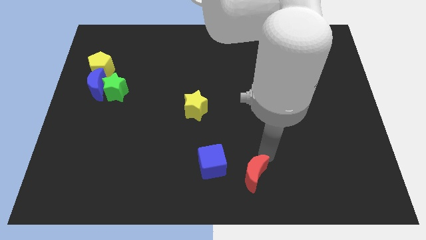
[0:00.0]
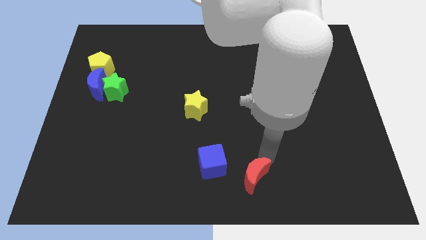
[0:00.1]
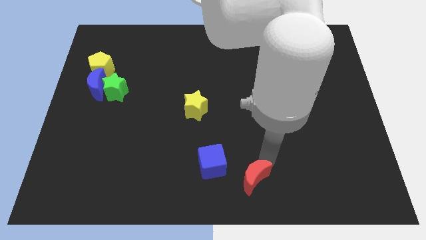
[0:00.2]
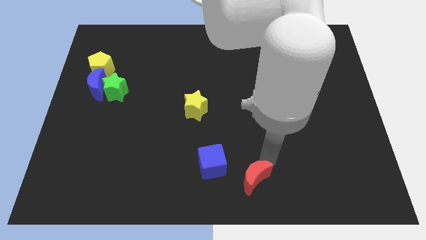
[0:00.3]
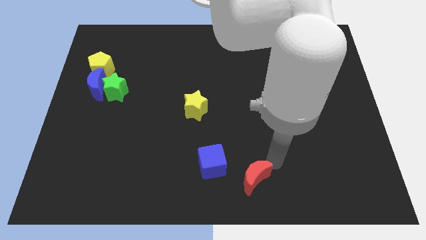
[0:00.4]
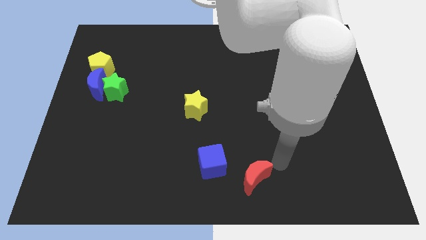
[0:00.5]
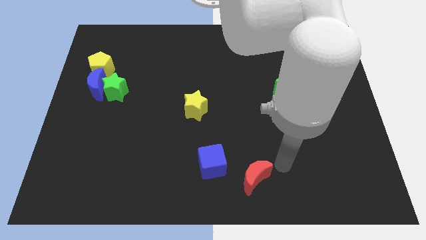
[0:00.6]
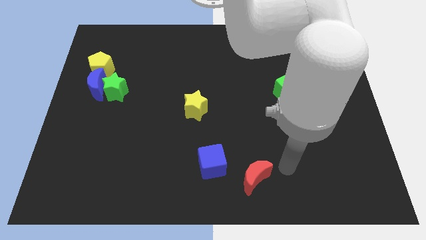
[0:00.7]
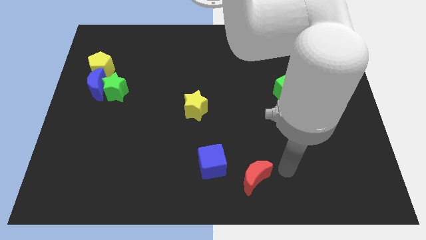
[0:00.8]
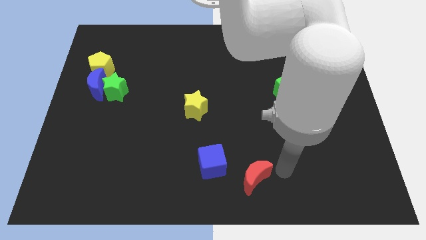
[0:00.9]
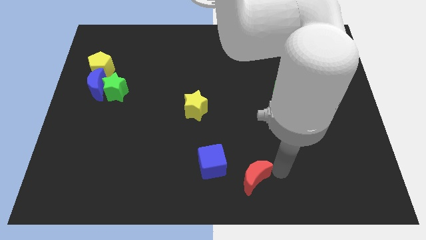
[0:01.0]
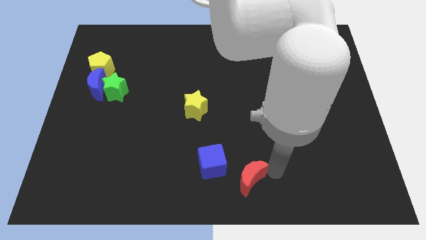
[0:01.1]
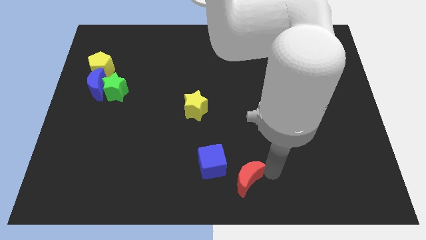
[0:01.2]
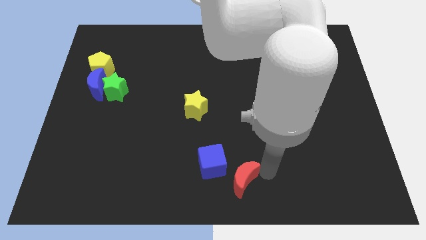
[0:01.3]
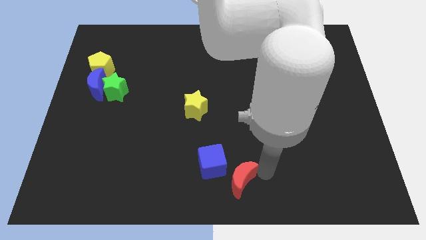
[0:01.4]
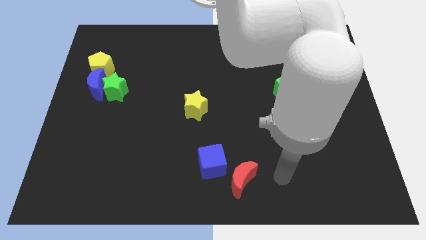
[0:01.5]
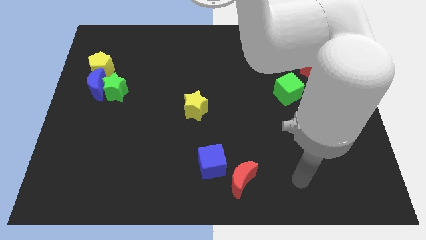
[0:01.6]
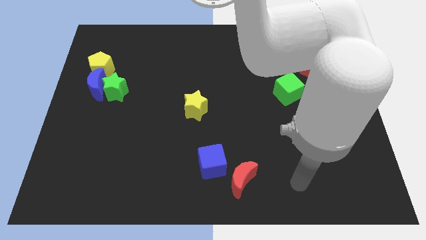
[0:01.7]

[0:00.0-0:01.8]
move red crescent to the left

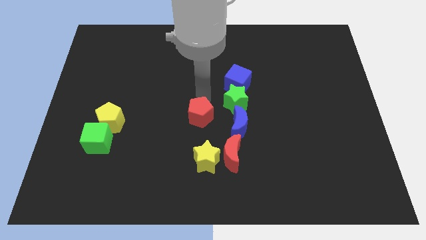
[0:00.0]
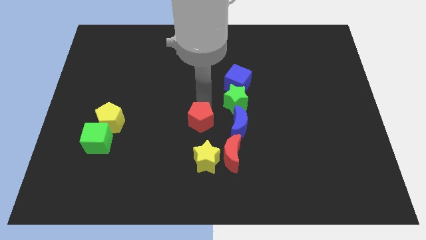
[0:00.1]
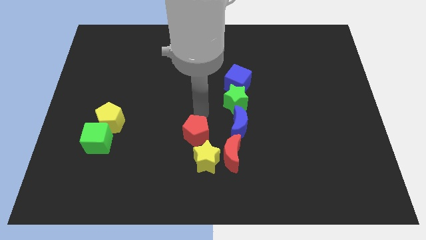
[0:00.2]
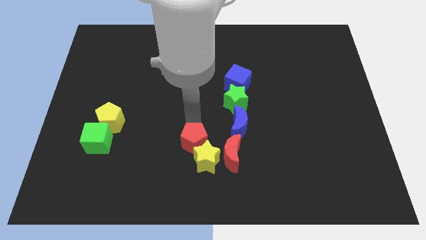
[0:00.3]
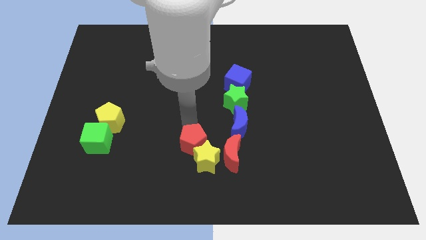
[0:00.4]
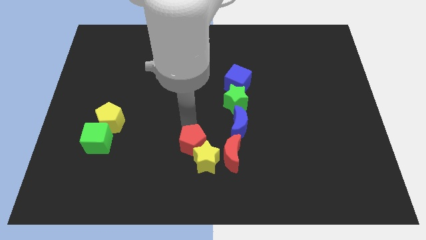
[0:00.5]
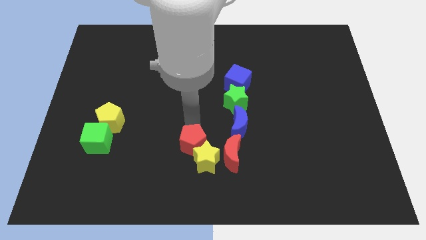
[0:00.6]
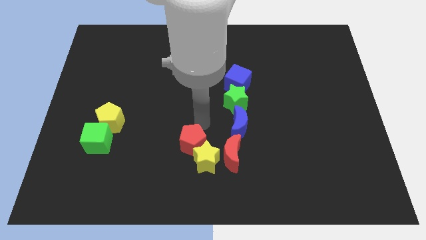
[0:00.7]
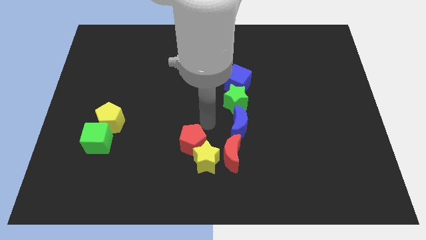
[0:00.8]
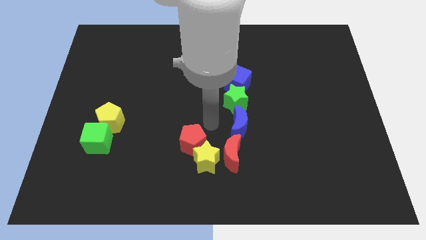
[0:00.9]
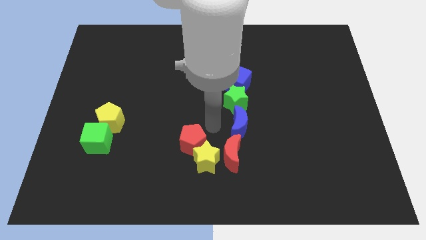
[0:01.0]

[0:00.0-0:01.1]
move the red pentagon into the yellow star

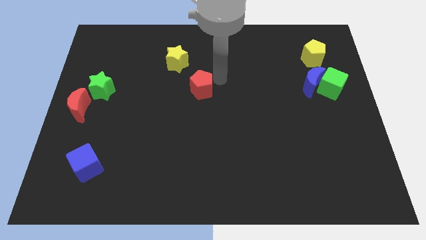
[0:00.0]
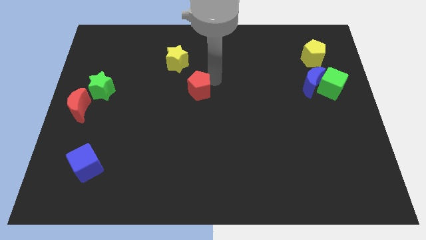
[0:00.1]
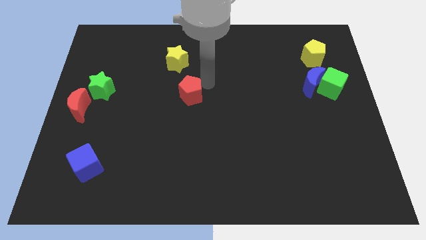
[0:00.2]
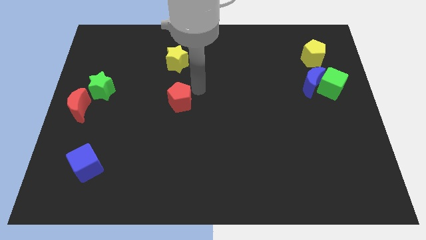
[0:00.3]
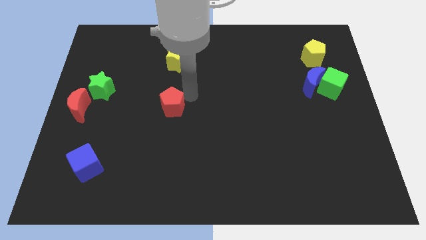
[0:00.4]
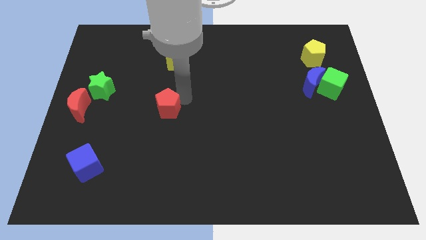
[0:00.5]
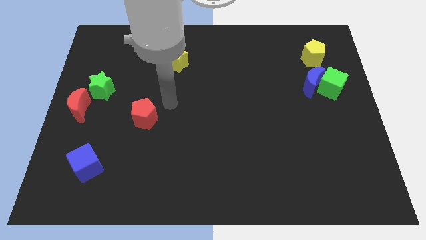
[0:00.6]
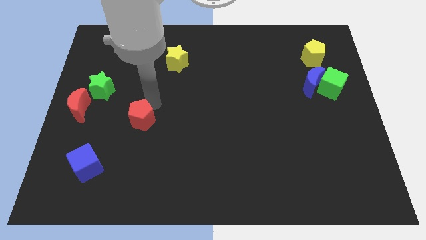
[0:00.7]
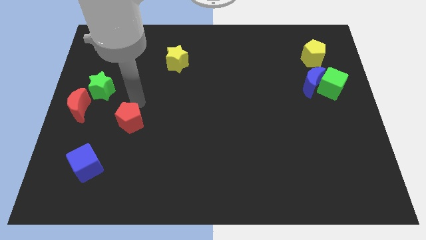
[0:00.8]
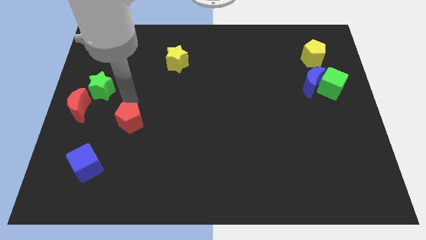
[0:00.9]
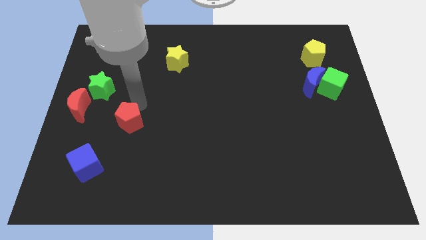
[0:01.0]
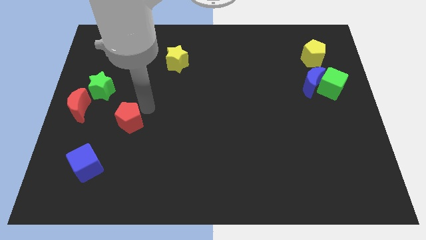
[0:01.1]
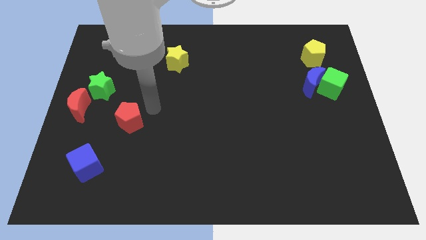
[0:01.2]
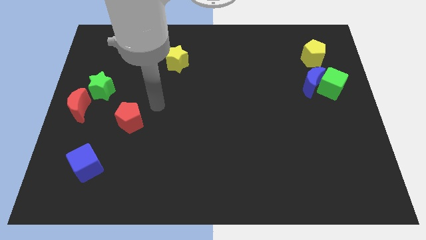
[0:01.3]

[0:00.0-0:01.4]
push the red pentagon to the left of the board

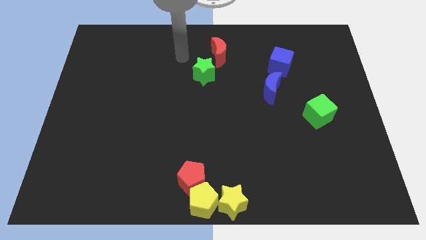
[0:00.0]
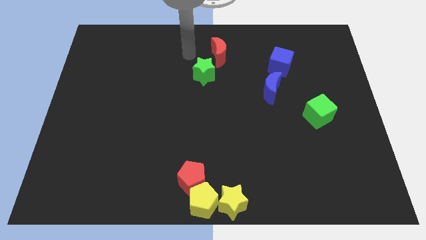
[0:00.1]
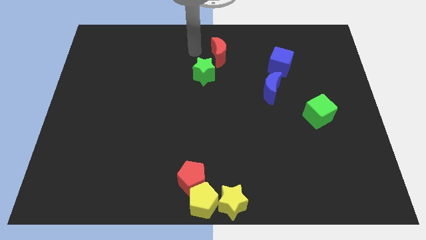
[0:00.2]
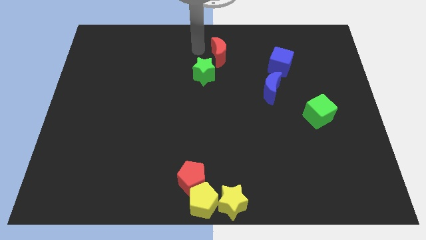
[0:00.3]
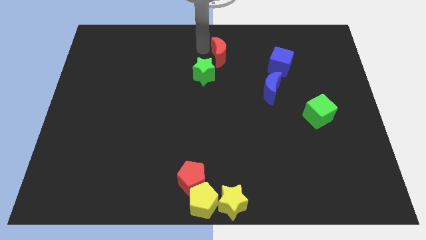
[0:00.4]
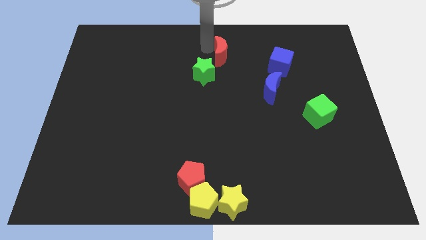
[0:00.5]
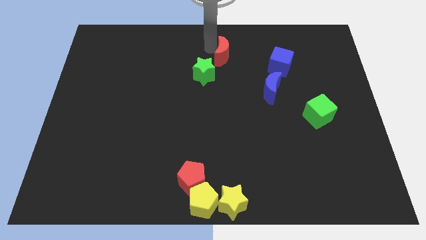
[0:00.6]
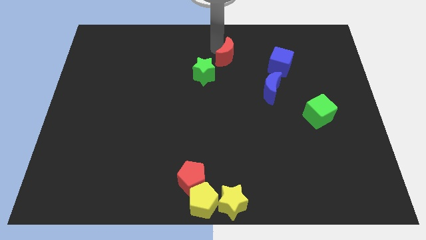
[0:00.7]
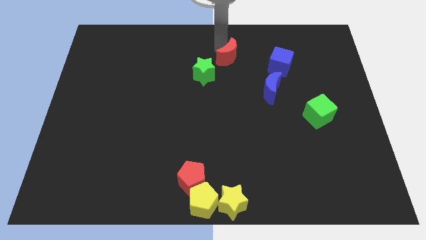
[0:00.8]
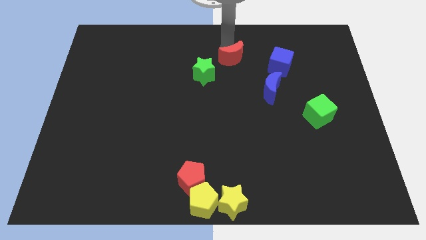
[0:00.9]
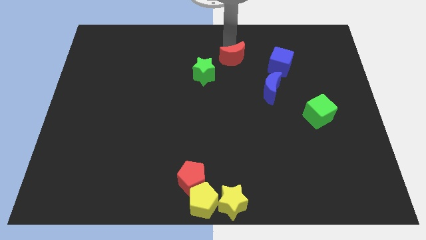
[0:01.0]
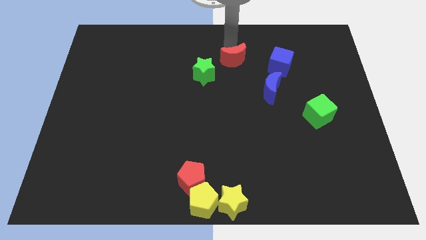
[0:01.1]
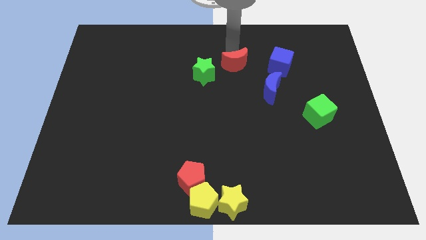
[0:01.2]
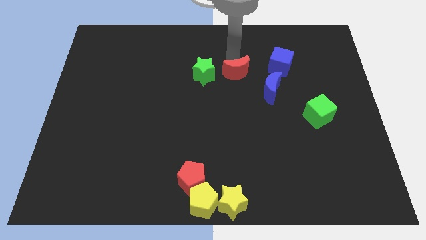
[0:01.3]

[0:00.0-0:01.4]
place the red crescent at right side of the green star

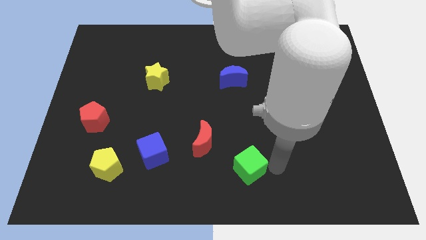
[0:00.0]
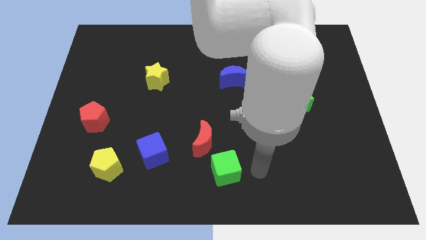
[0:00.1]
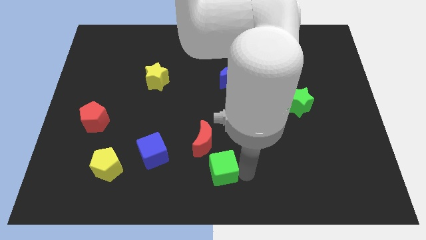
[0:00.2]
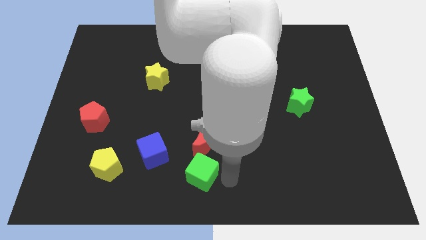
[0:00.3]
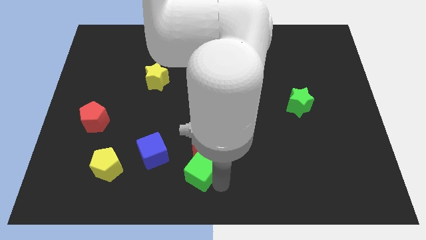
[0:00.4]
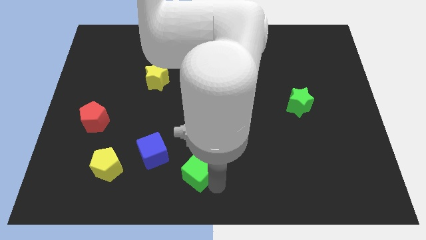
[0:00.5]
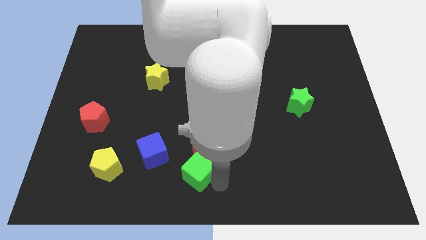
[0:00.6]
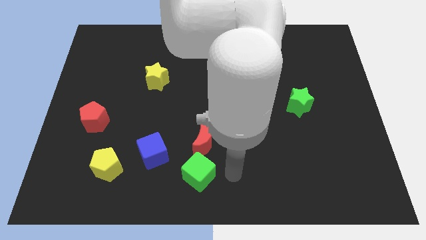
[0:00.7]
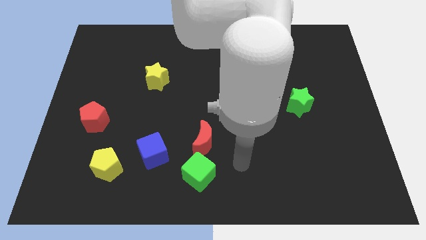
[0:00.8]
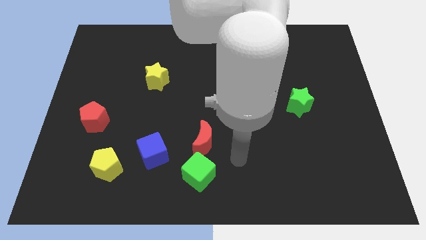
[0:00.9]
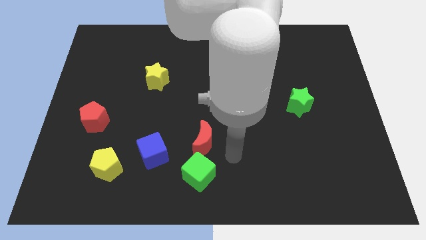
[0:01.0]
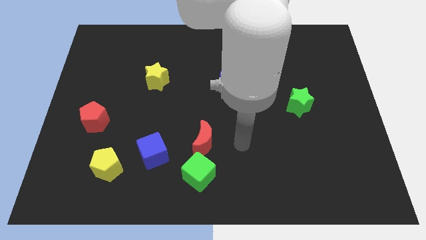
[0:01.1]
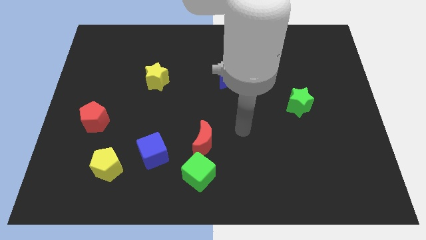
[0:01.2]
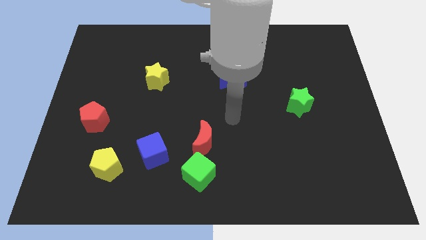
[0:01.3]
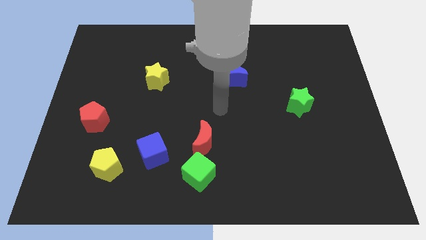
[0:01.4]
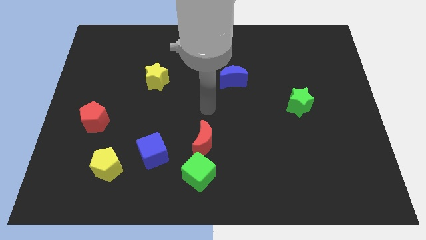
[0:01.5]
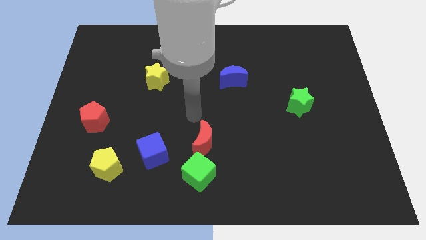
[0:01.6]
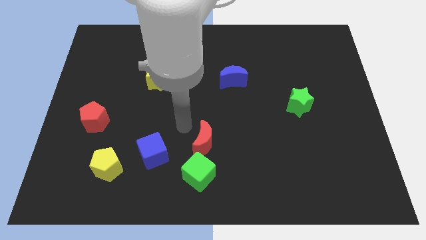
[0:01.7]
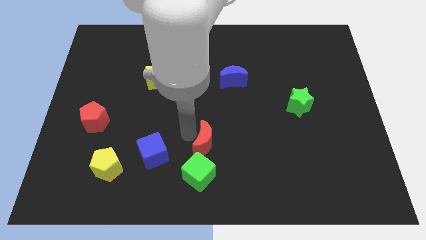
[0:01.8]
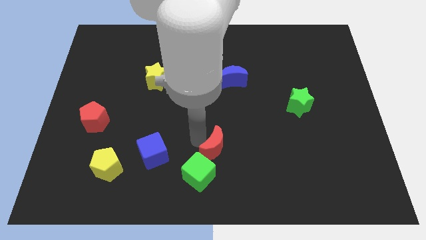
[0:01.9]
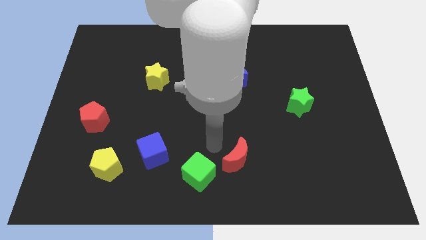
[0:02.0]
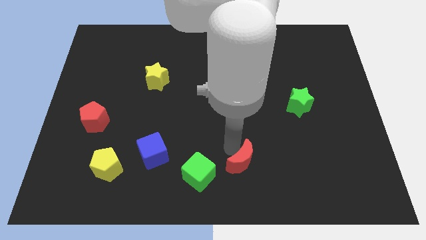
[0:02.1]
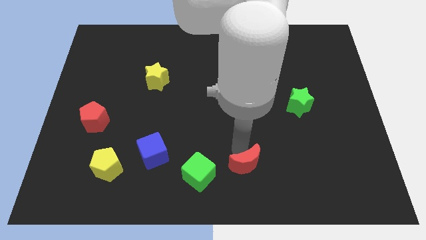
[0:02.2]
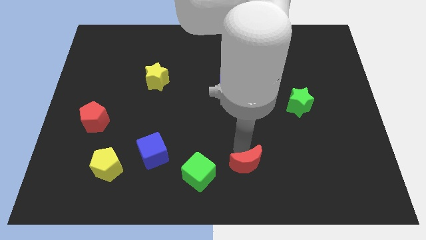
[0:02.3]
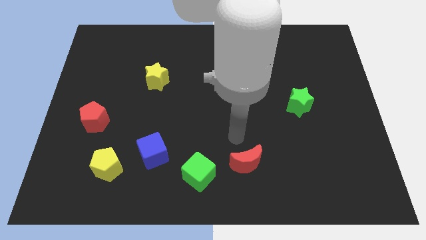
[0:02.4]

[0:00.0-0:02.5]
place the green cube and red moon in a horizontal line at the bottom side of the board

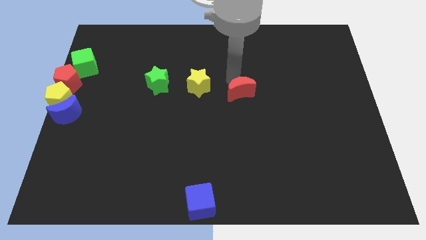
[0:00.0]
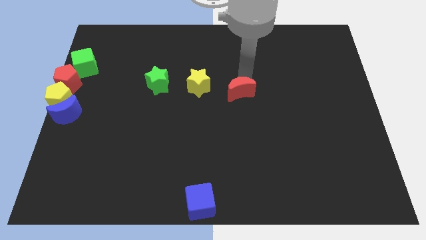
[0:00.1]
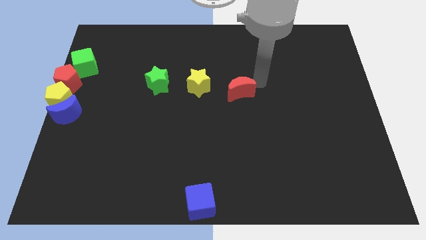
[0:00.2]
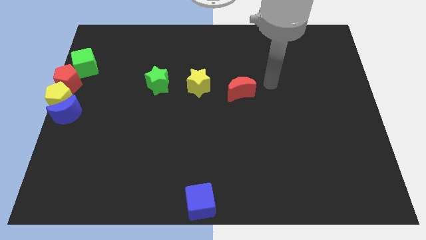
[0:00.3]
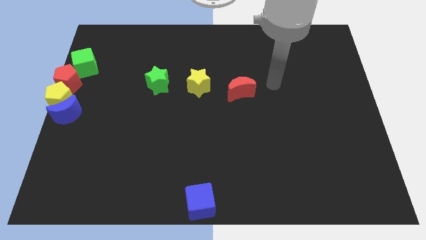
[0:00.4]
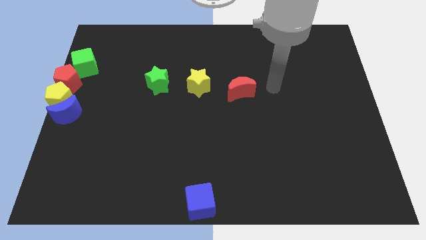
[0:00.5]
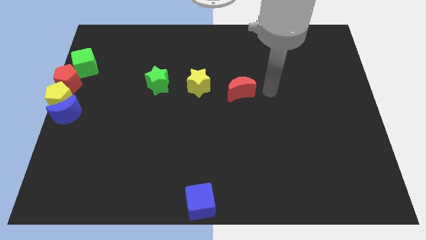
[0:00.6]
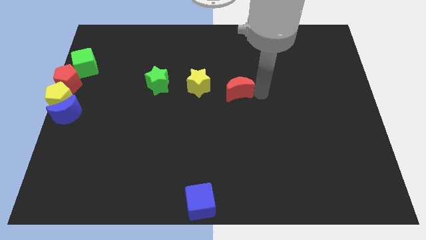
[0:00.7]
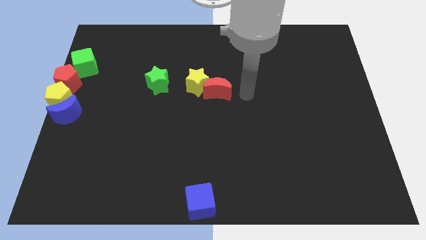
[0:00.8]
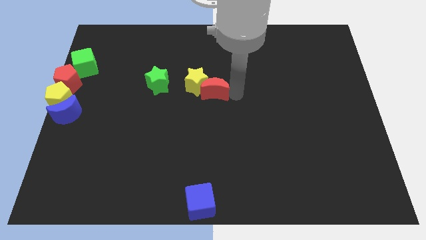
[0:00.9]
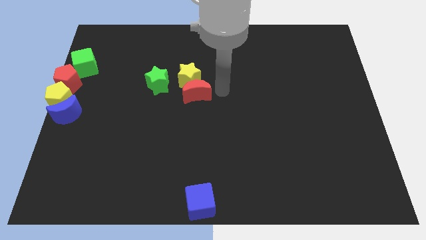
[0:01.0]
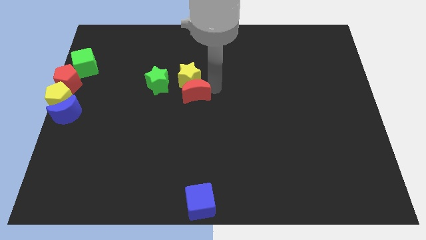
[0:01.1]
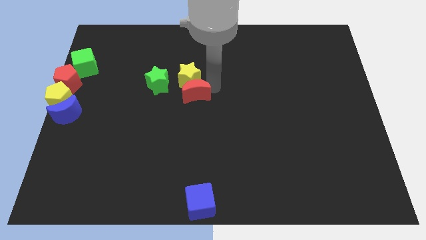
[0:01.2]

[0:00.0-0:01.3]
place the red moon down to the yellow star
